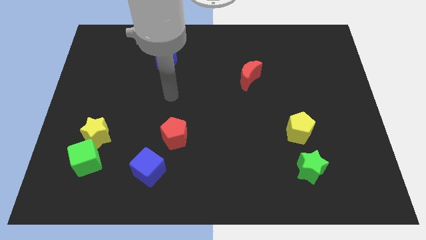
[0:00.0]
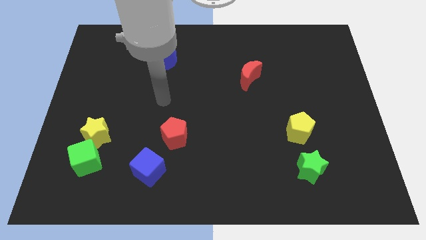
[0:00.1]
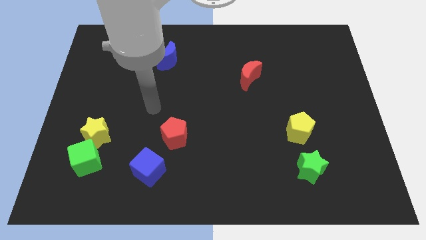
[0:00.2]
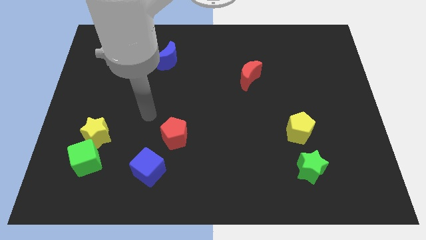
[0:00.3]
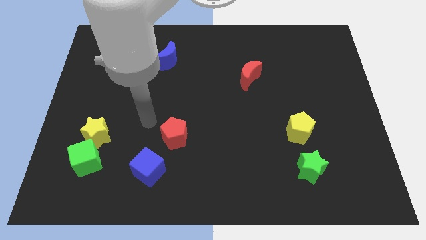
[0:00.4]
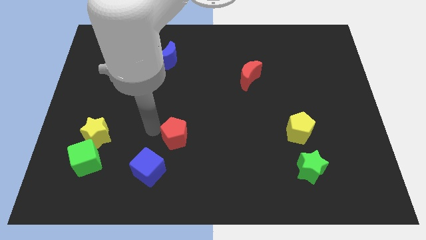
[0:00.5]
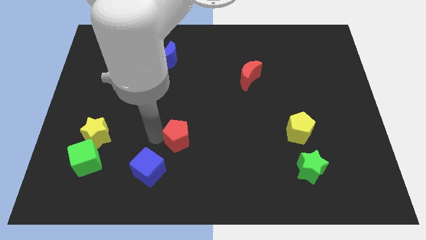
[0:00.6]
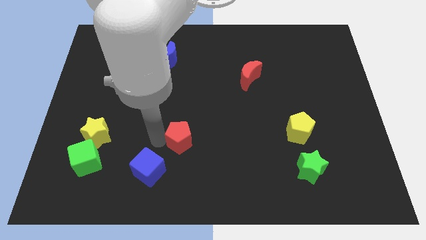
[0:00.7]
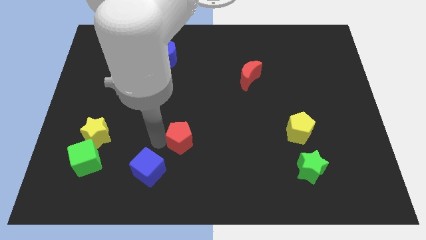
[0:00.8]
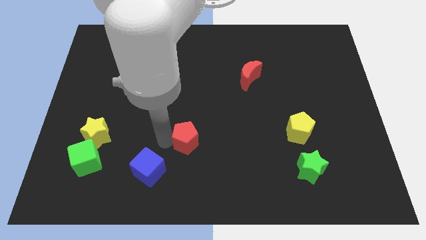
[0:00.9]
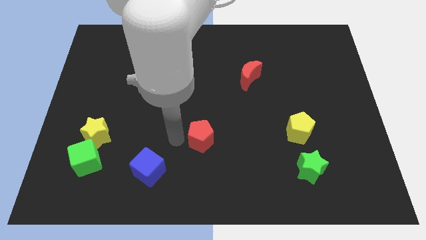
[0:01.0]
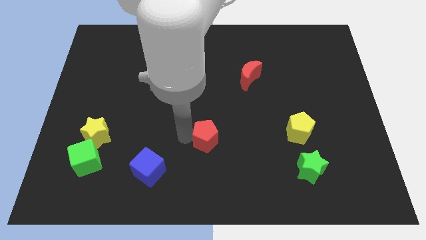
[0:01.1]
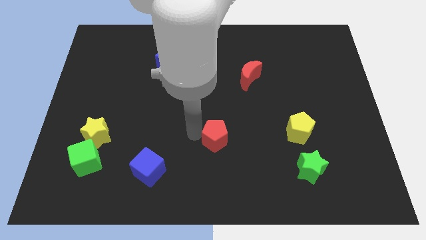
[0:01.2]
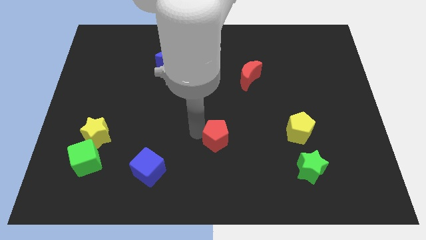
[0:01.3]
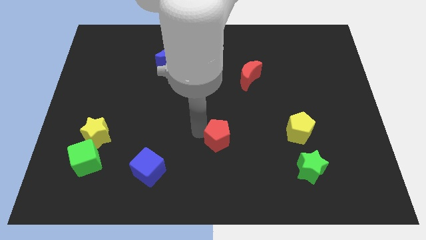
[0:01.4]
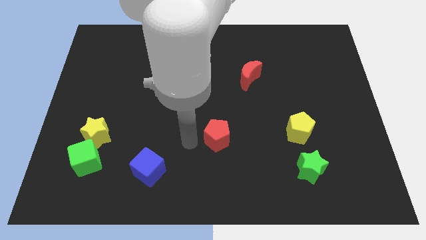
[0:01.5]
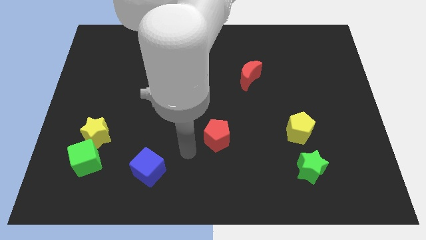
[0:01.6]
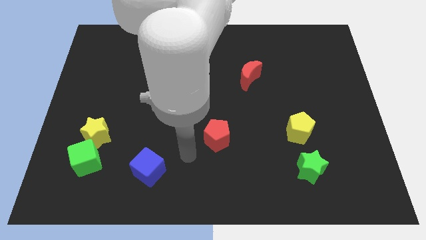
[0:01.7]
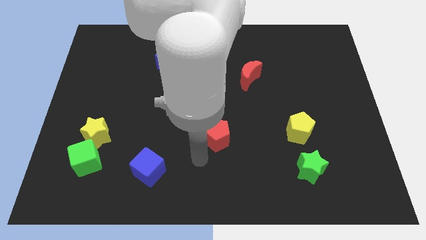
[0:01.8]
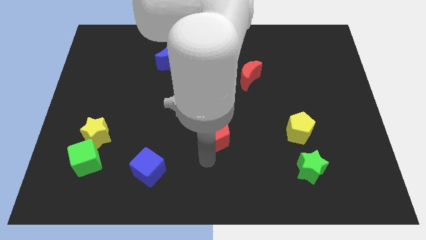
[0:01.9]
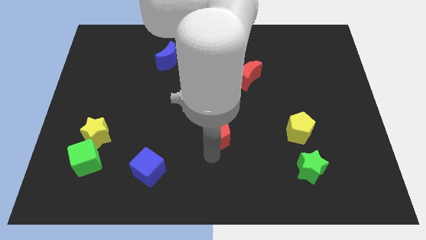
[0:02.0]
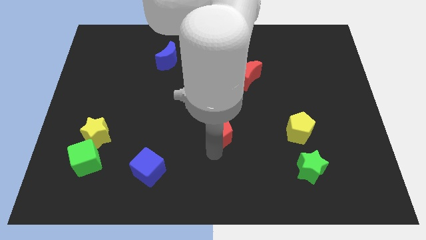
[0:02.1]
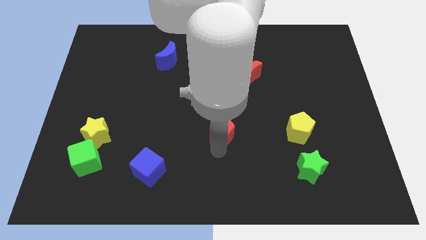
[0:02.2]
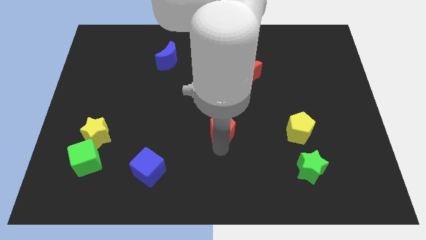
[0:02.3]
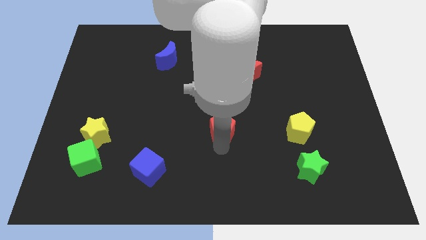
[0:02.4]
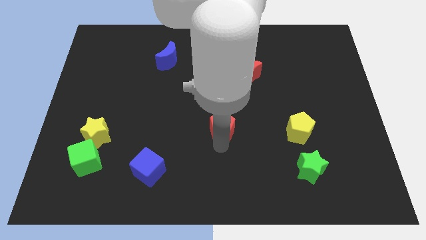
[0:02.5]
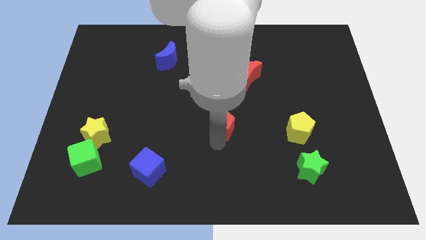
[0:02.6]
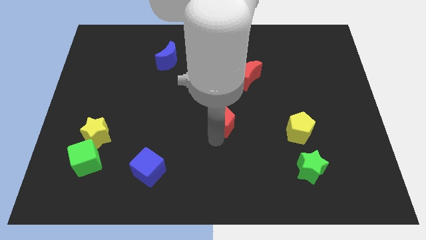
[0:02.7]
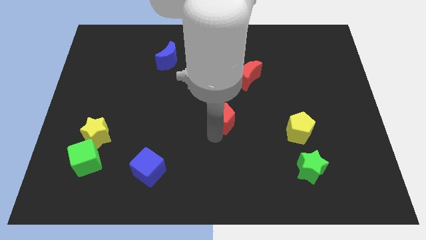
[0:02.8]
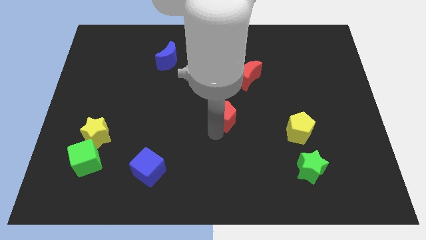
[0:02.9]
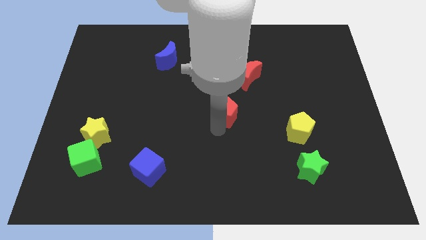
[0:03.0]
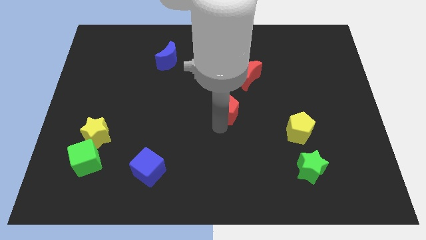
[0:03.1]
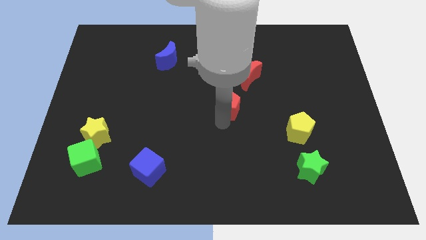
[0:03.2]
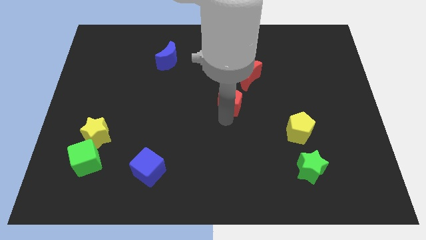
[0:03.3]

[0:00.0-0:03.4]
push red pentagon at the bottom of red moon

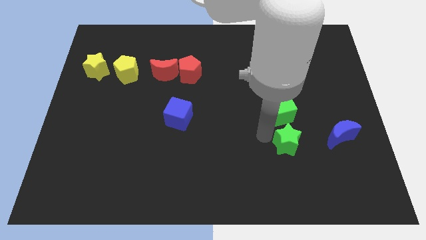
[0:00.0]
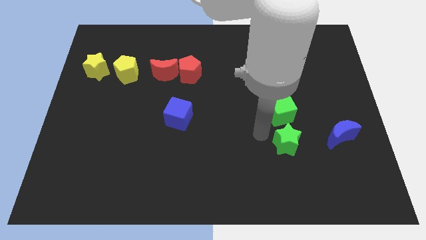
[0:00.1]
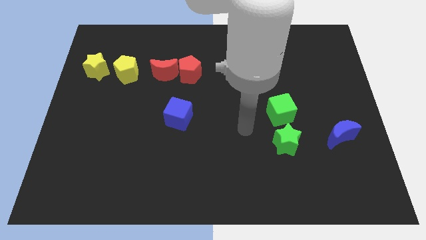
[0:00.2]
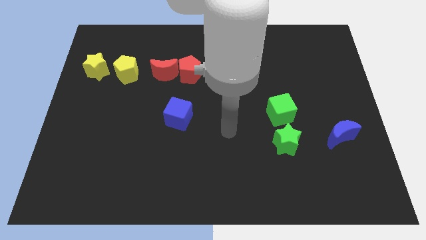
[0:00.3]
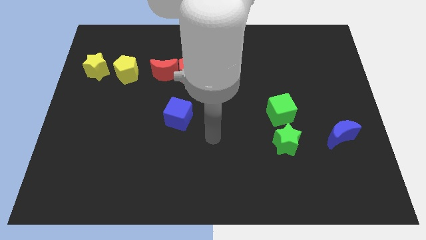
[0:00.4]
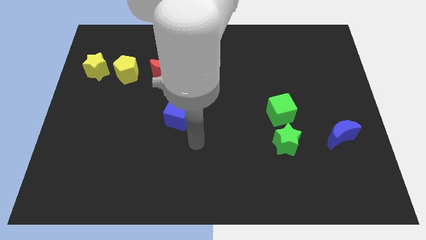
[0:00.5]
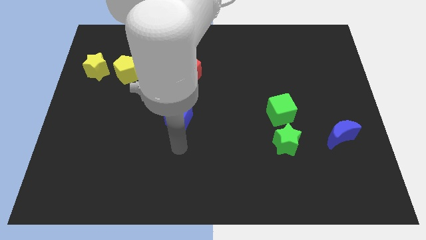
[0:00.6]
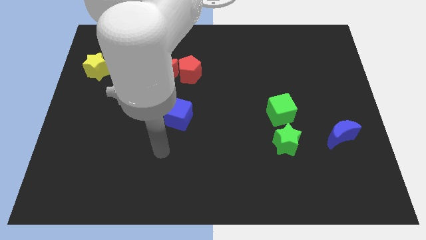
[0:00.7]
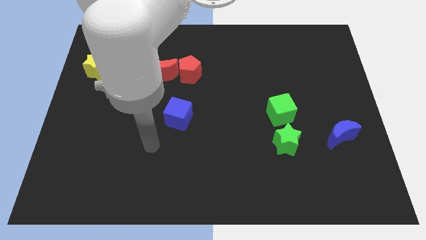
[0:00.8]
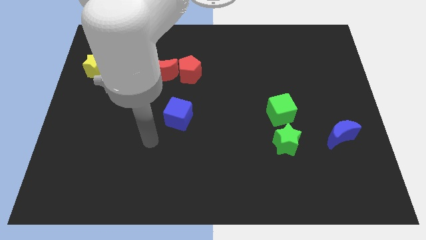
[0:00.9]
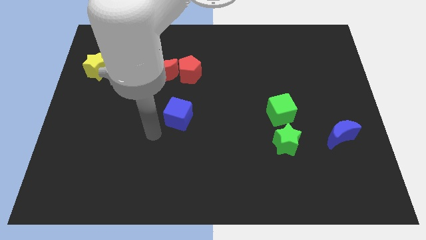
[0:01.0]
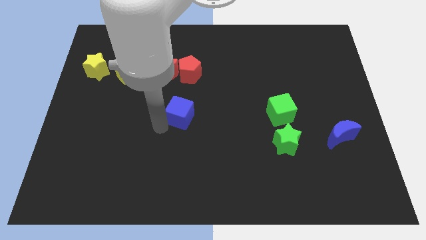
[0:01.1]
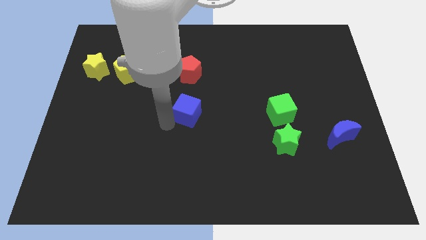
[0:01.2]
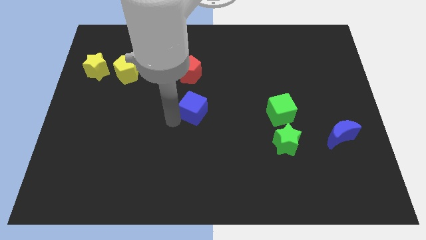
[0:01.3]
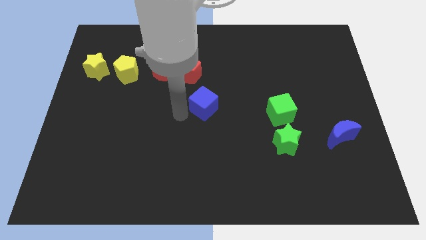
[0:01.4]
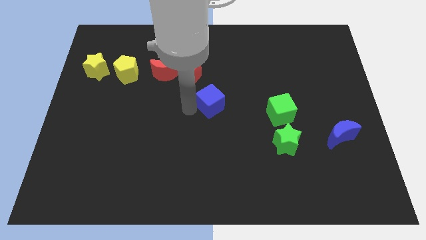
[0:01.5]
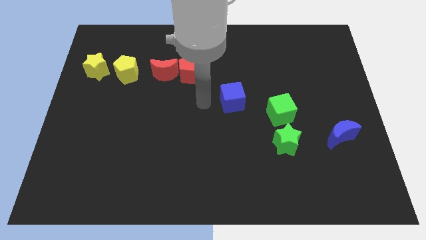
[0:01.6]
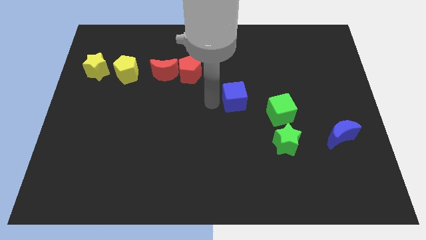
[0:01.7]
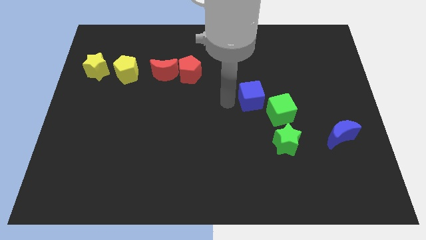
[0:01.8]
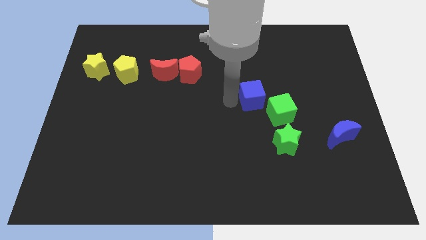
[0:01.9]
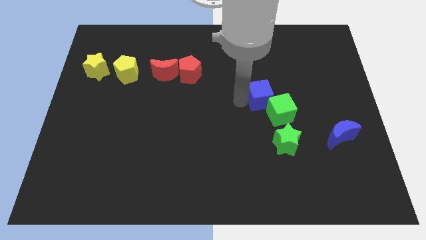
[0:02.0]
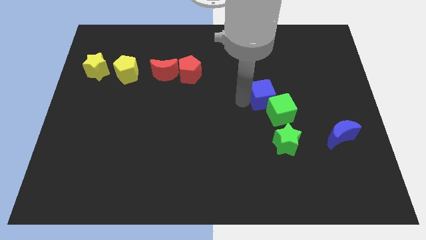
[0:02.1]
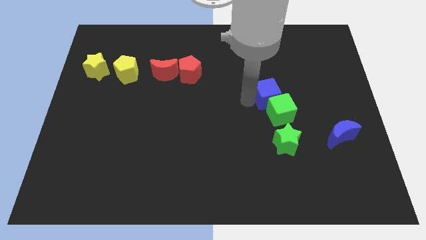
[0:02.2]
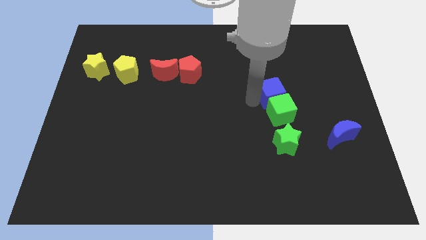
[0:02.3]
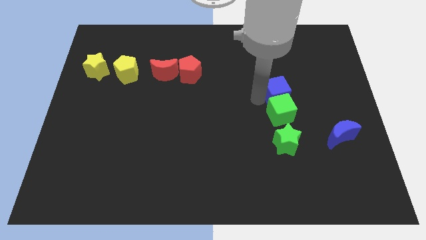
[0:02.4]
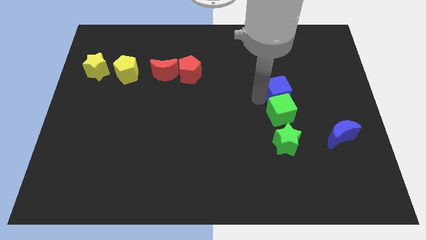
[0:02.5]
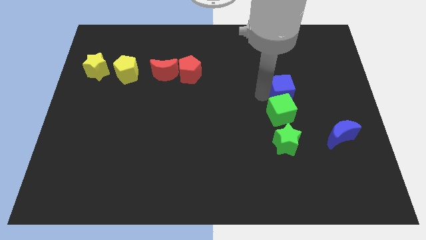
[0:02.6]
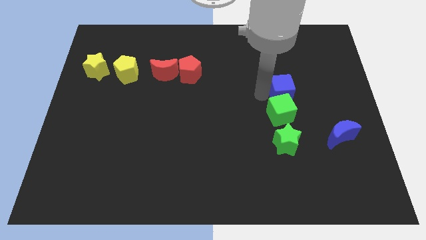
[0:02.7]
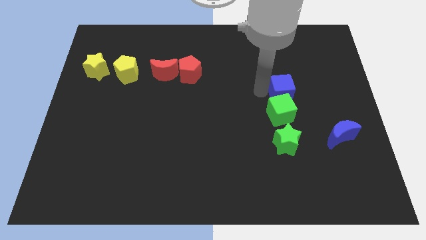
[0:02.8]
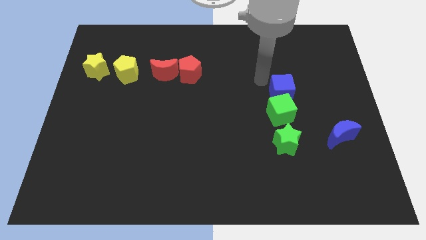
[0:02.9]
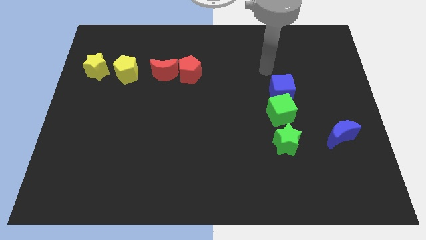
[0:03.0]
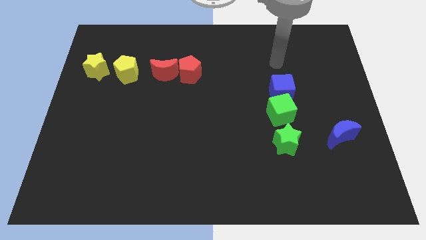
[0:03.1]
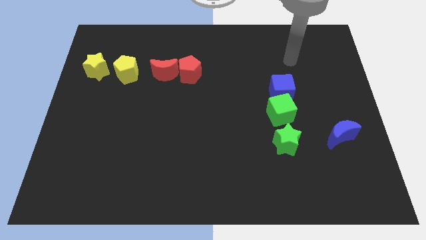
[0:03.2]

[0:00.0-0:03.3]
move the blue cube above the green cube

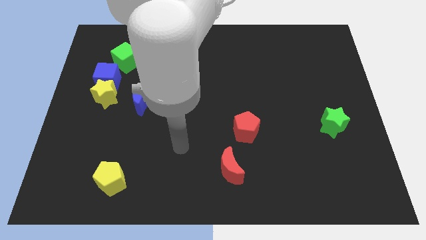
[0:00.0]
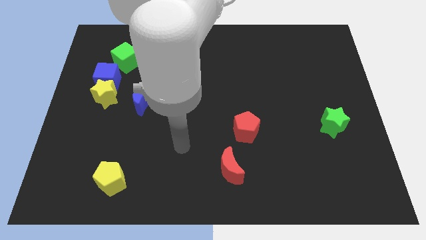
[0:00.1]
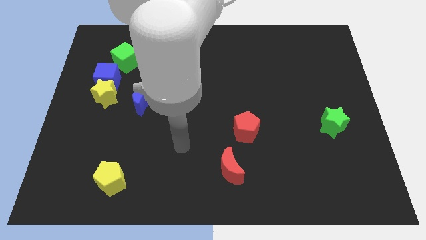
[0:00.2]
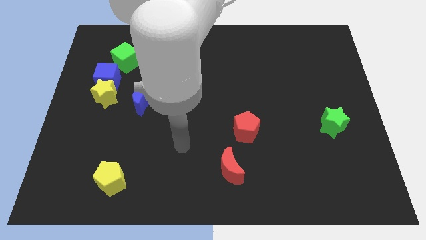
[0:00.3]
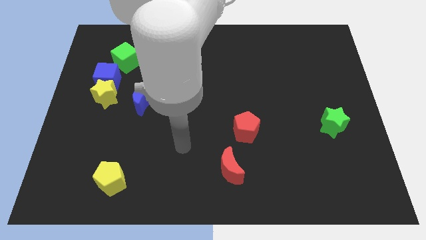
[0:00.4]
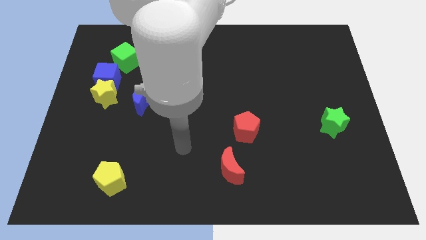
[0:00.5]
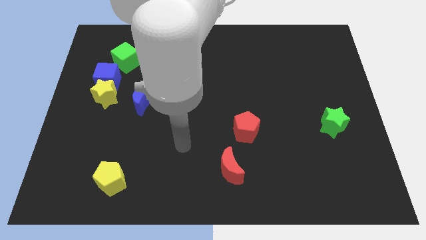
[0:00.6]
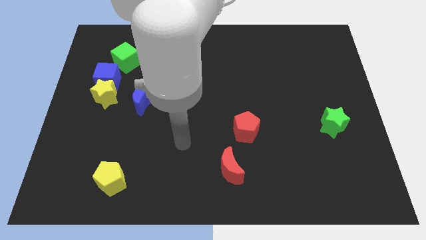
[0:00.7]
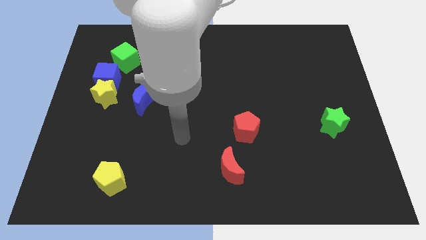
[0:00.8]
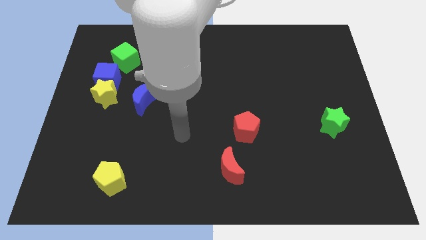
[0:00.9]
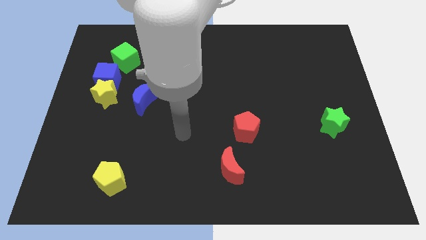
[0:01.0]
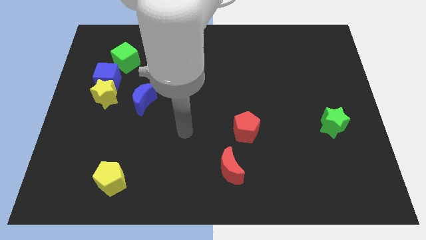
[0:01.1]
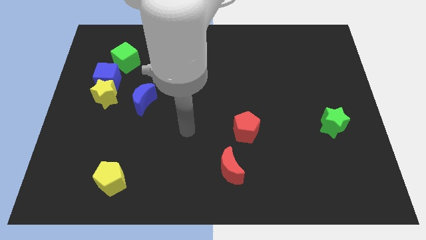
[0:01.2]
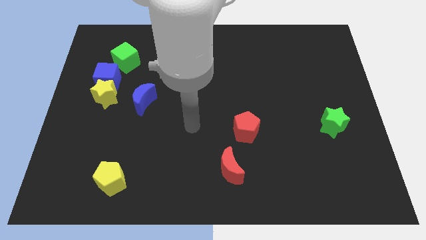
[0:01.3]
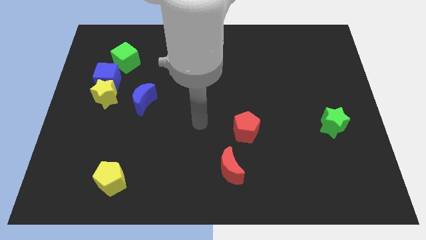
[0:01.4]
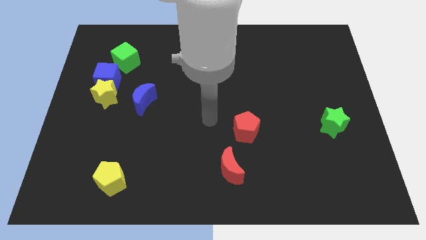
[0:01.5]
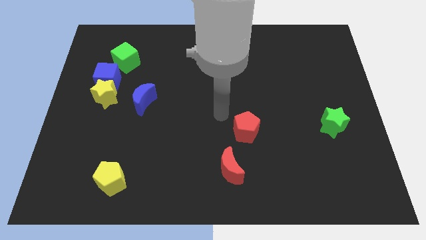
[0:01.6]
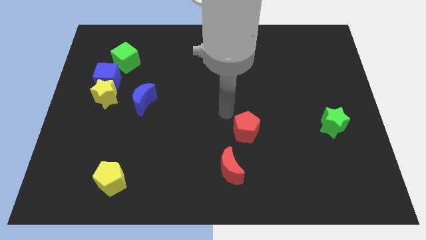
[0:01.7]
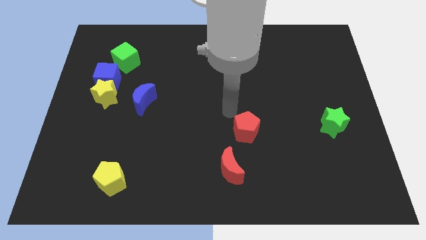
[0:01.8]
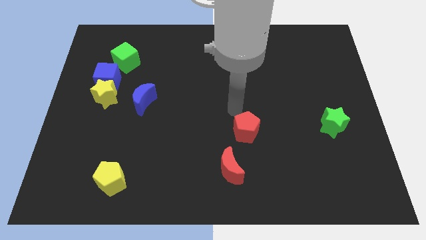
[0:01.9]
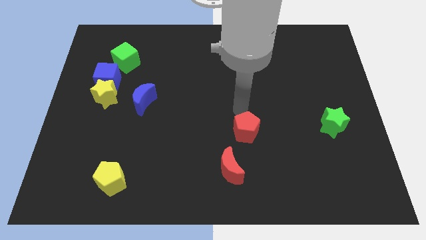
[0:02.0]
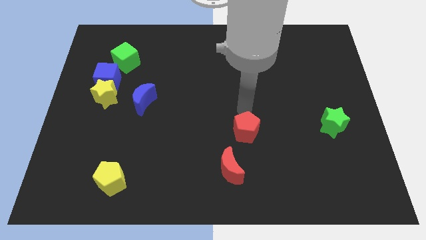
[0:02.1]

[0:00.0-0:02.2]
point your arm at the top side of the red crescent

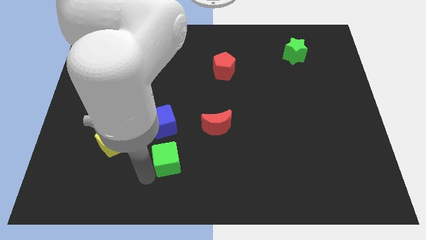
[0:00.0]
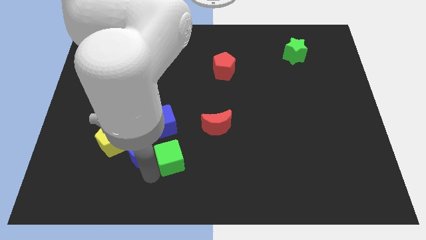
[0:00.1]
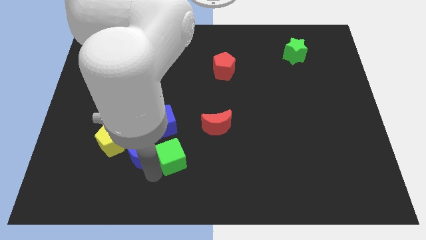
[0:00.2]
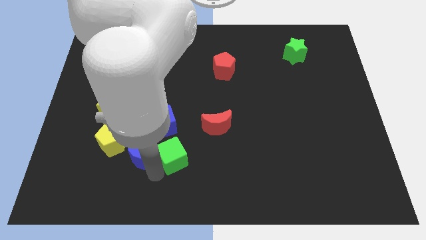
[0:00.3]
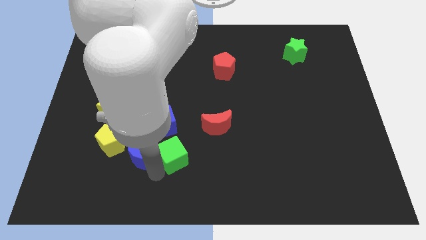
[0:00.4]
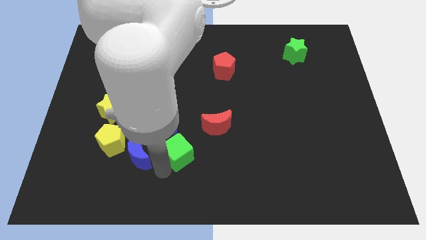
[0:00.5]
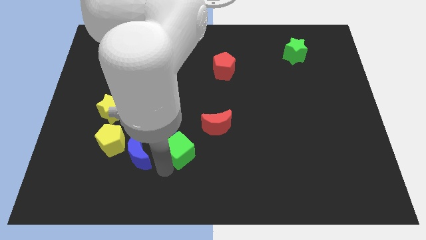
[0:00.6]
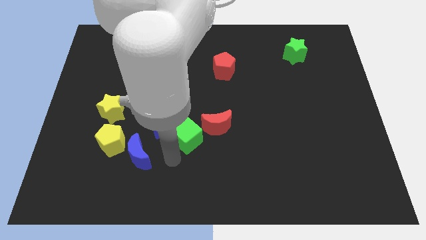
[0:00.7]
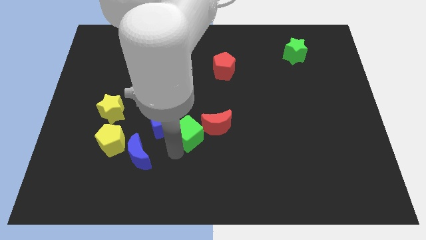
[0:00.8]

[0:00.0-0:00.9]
separate green cube from blue crescent
